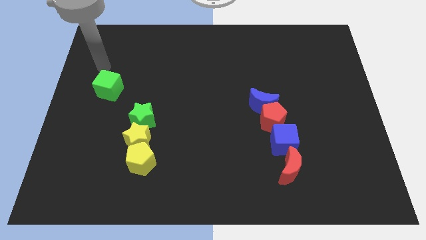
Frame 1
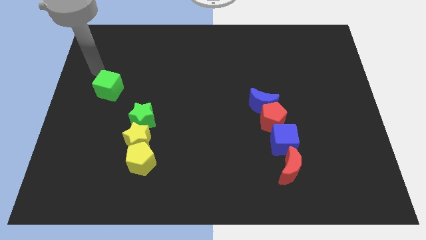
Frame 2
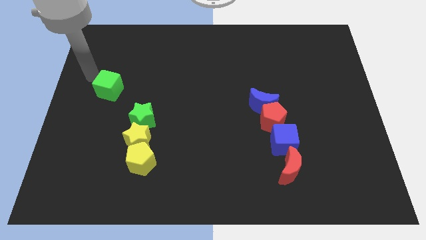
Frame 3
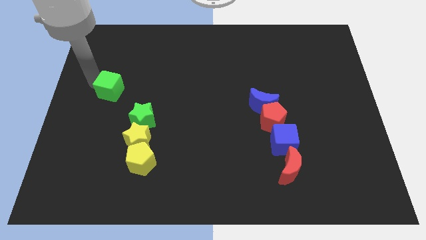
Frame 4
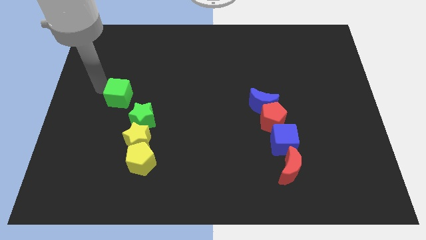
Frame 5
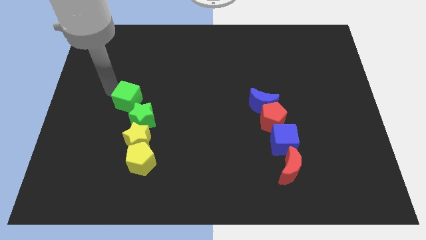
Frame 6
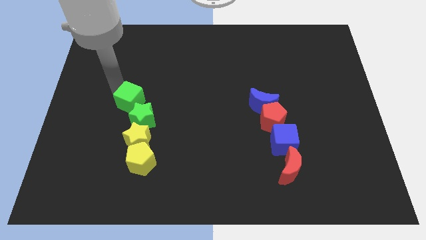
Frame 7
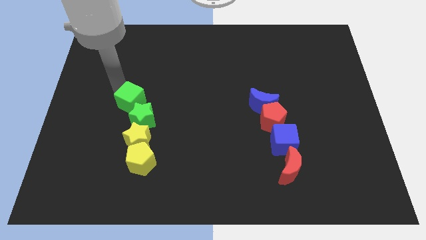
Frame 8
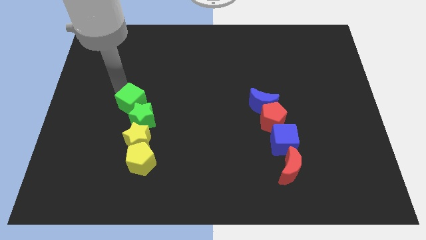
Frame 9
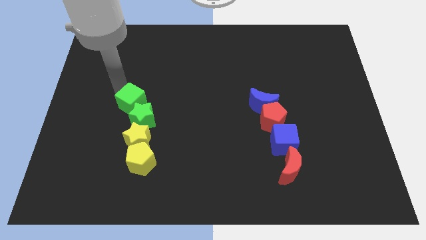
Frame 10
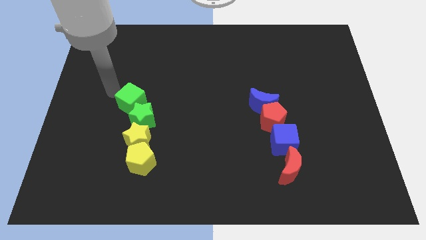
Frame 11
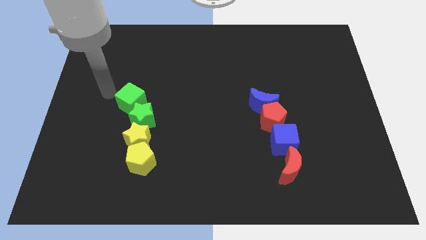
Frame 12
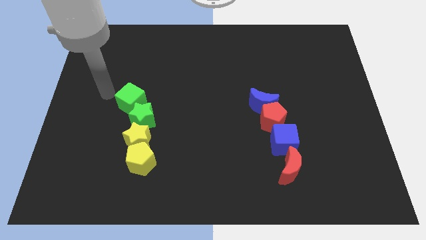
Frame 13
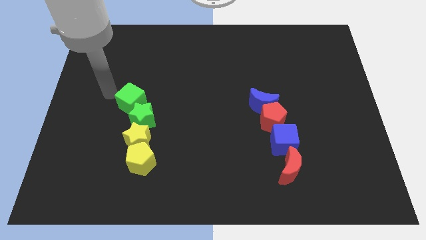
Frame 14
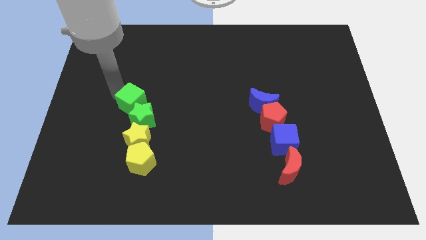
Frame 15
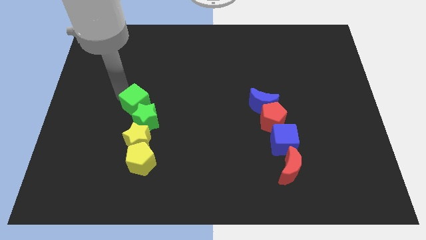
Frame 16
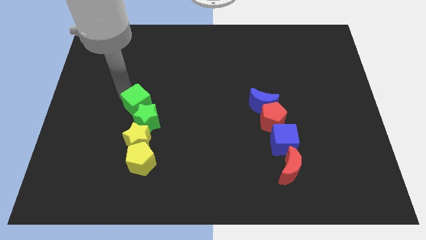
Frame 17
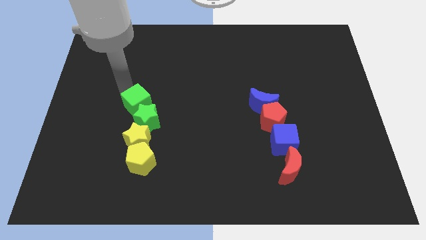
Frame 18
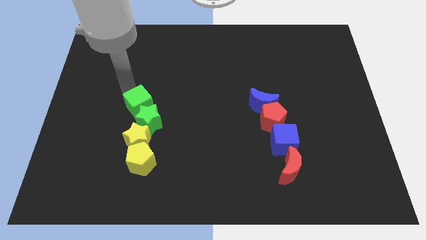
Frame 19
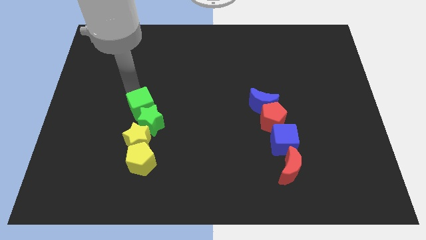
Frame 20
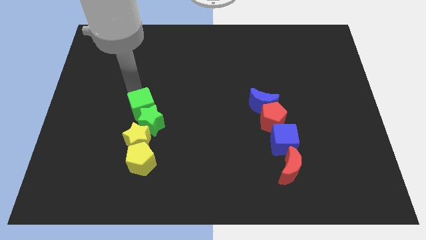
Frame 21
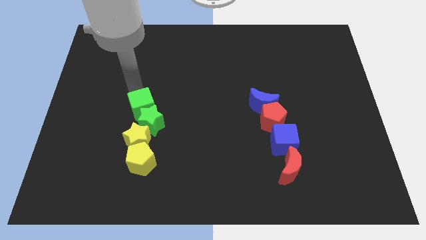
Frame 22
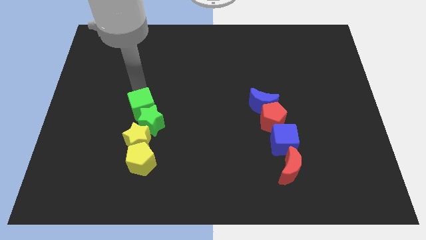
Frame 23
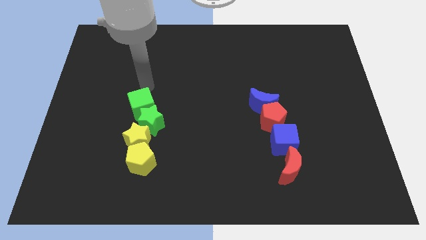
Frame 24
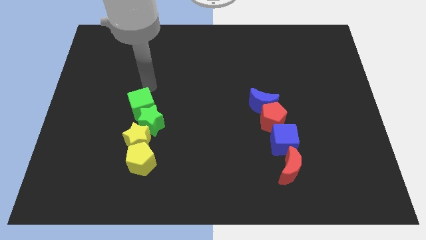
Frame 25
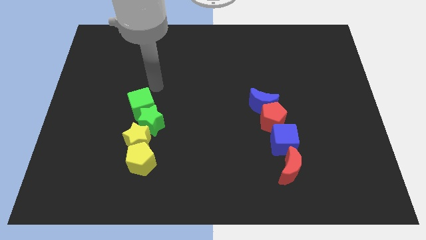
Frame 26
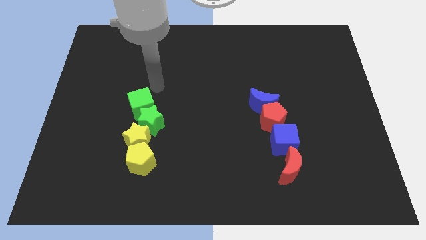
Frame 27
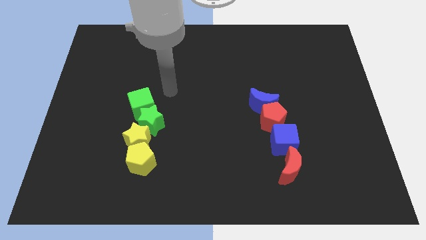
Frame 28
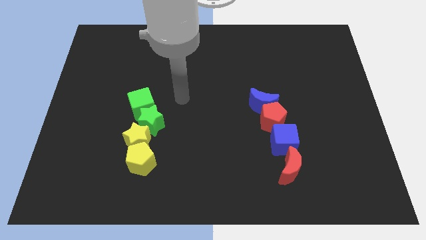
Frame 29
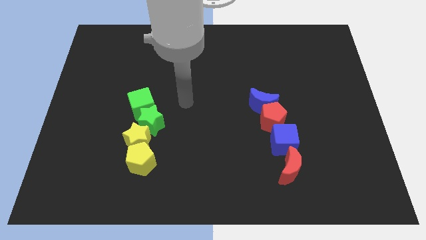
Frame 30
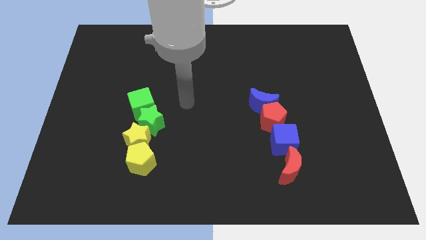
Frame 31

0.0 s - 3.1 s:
move the green cube into the green star

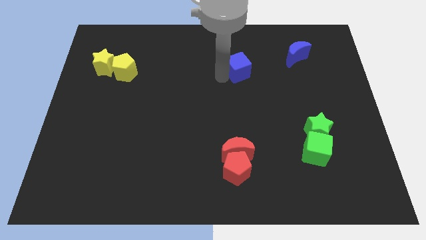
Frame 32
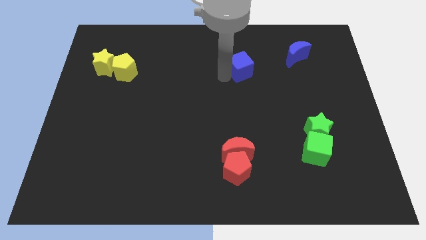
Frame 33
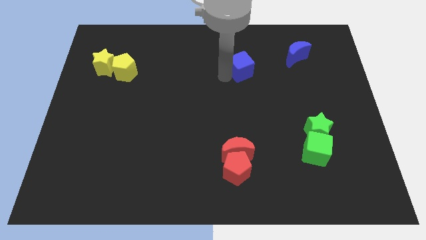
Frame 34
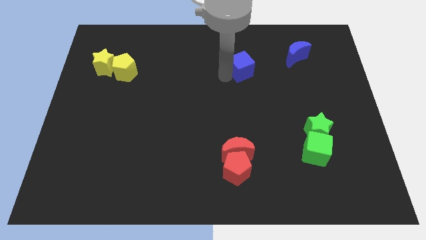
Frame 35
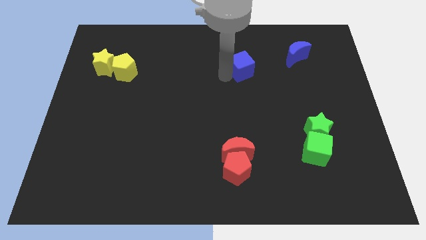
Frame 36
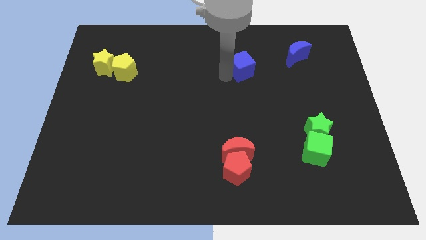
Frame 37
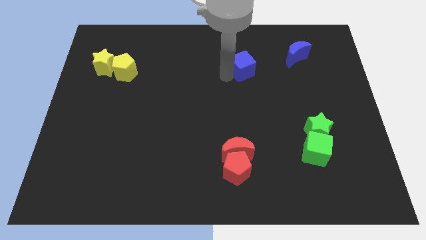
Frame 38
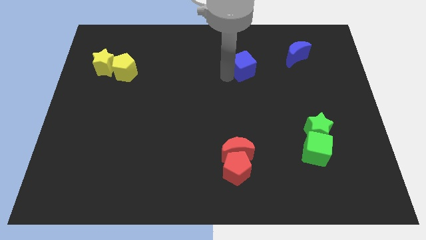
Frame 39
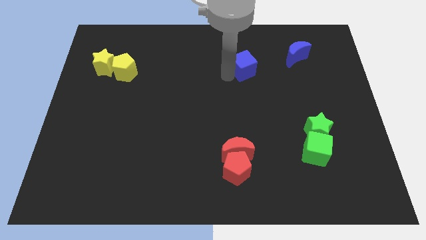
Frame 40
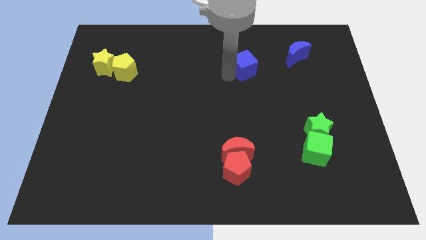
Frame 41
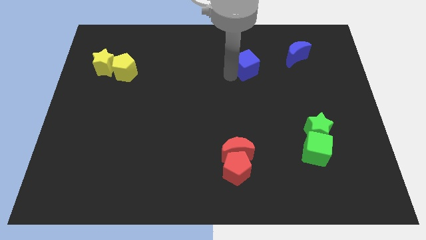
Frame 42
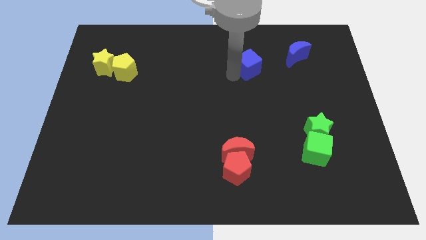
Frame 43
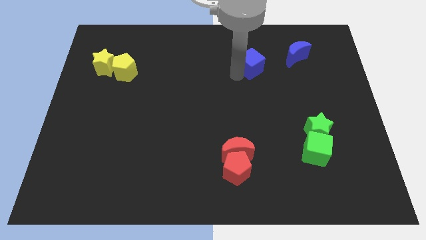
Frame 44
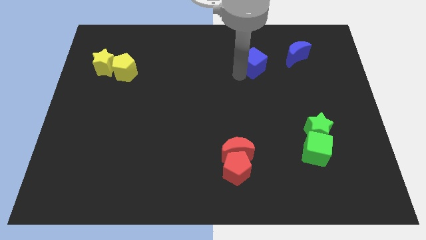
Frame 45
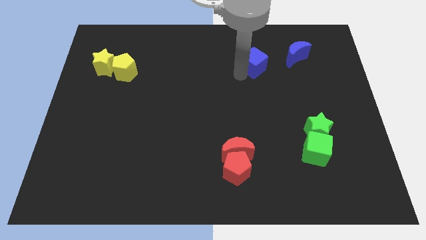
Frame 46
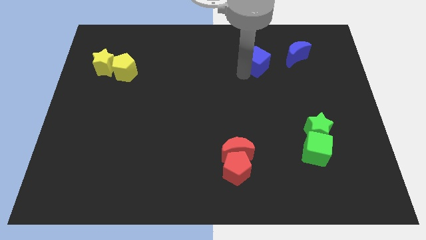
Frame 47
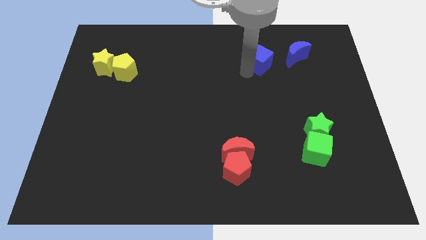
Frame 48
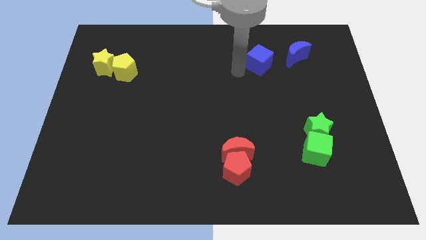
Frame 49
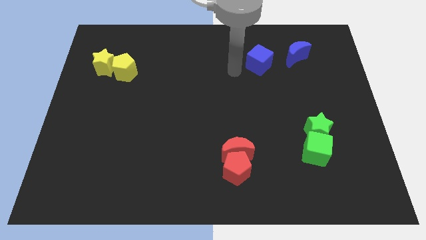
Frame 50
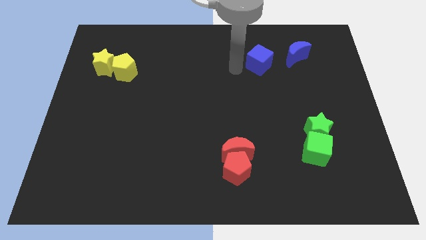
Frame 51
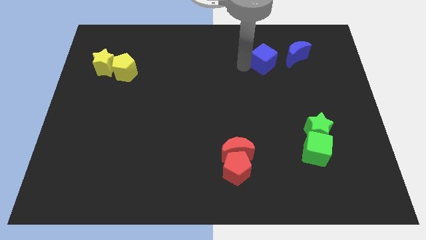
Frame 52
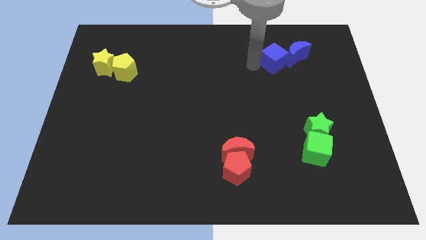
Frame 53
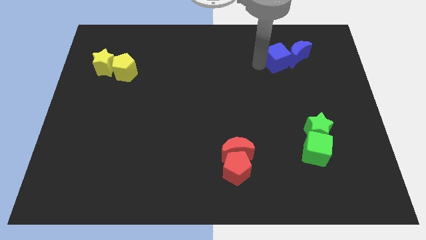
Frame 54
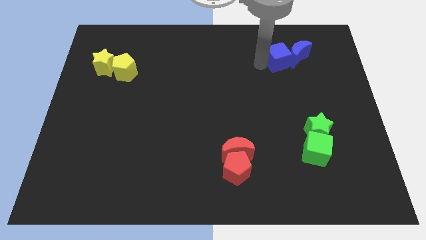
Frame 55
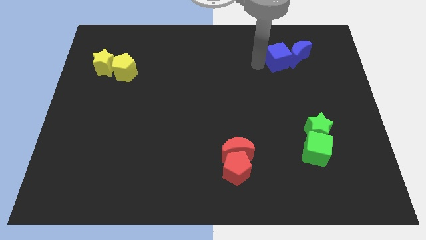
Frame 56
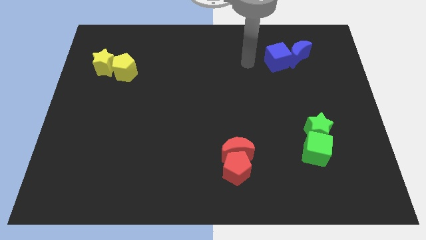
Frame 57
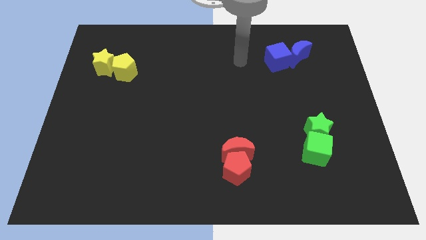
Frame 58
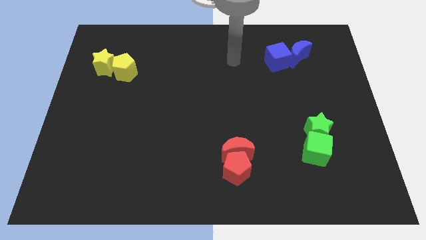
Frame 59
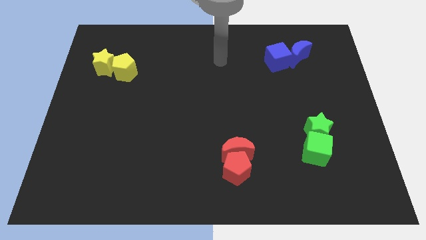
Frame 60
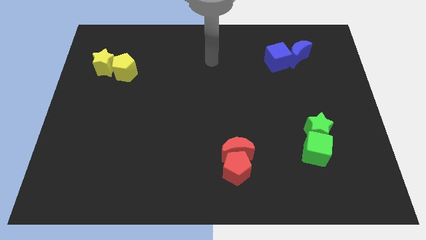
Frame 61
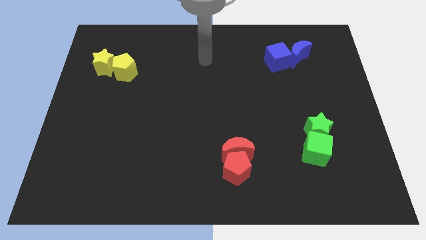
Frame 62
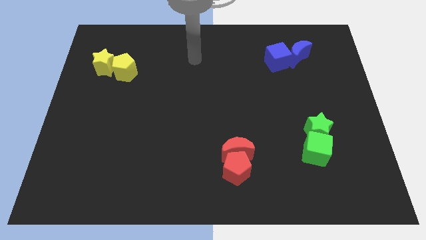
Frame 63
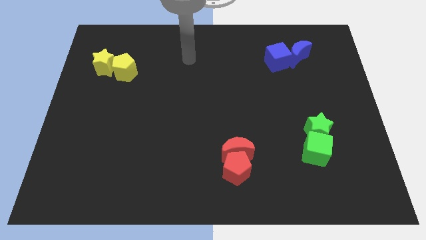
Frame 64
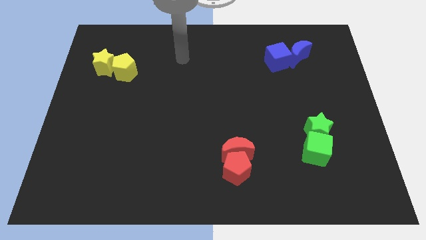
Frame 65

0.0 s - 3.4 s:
group up the blue blocks at the top side of the green blocks

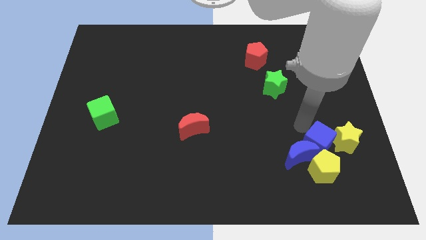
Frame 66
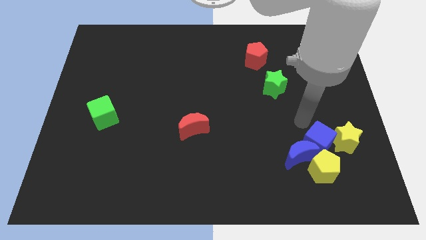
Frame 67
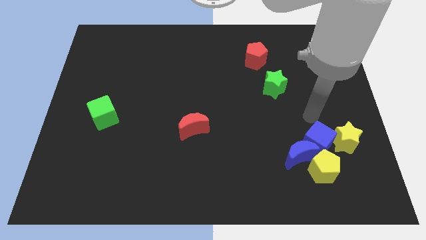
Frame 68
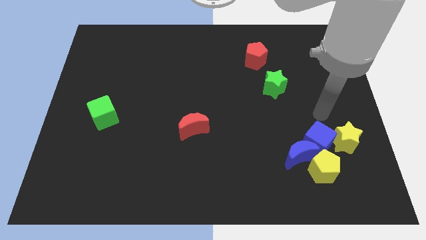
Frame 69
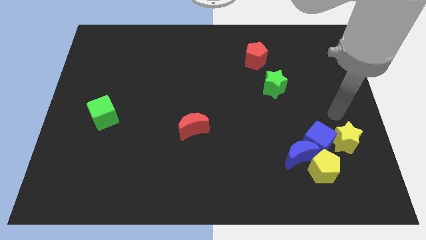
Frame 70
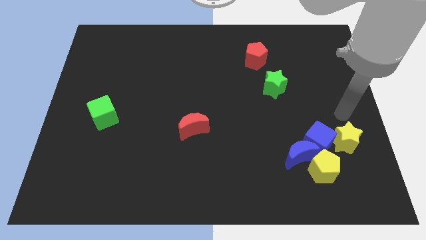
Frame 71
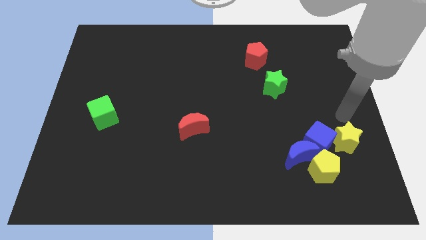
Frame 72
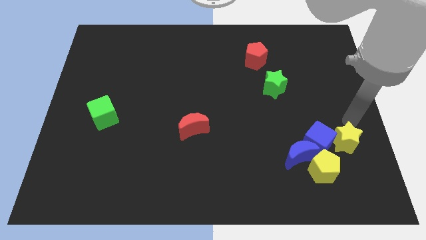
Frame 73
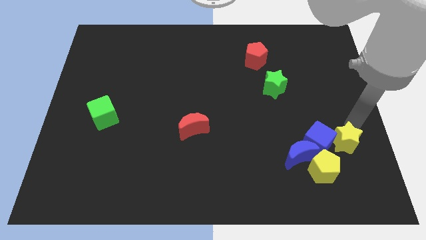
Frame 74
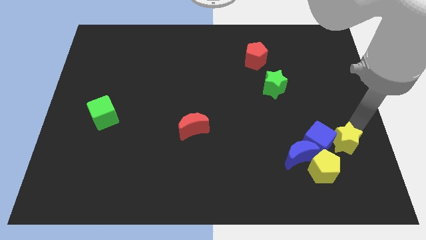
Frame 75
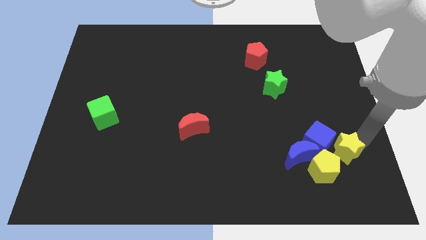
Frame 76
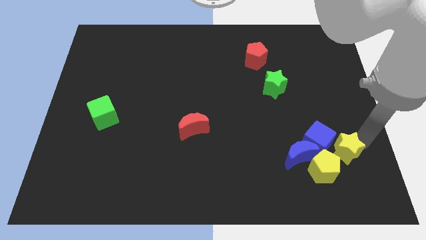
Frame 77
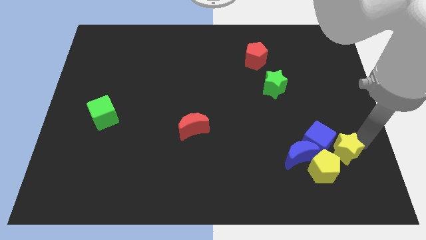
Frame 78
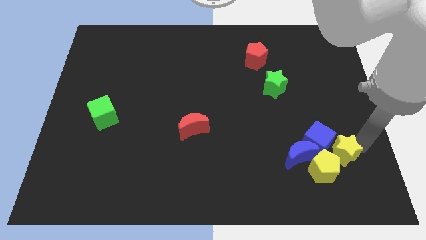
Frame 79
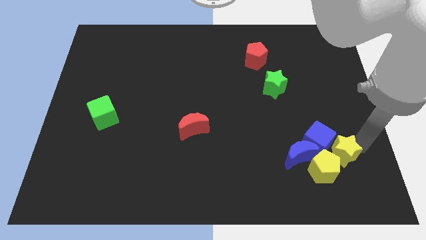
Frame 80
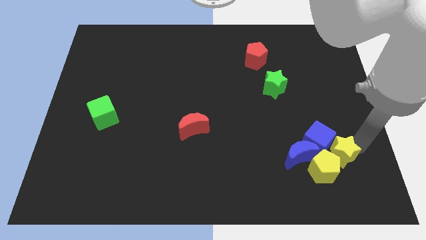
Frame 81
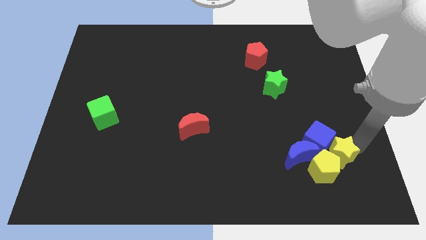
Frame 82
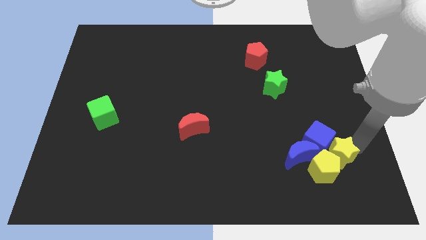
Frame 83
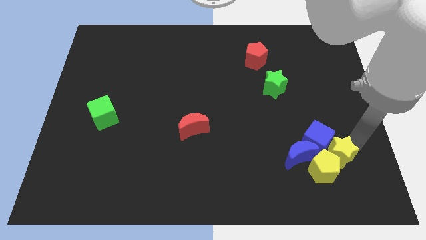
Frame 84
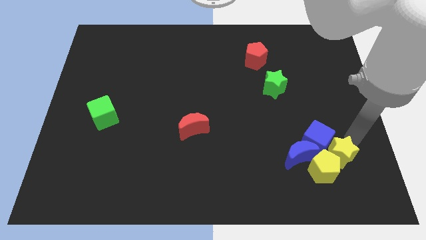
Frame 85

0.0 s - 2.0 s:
push the yellow star into the yellow pentagon

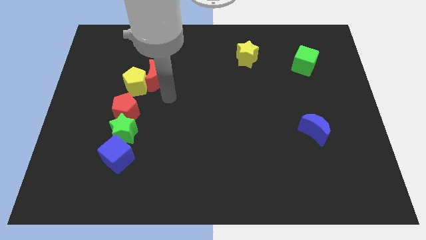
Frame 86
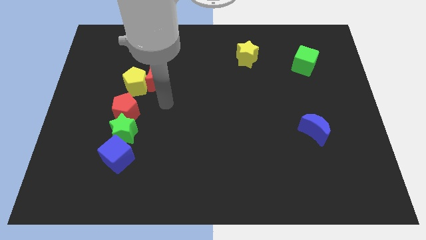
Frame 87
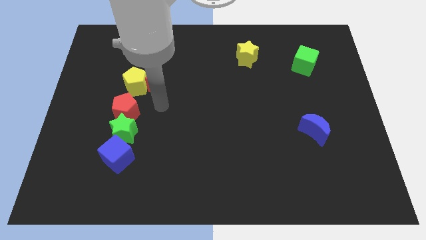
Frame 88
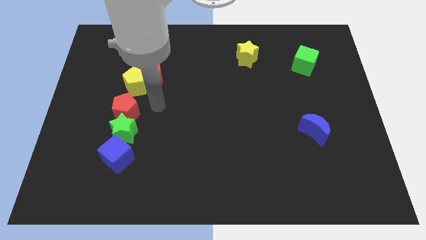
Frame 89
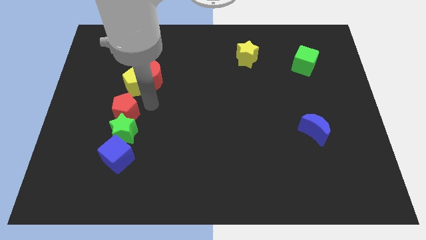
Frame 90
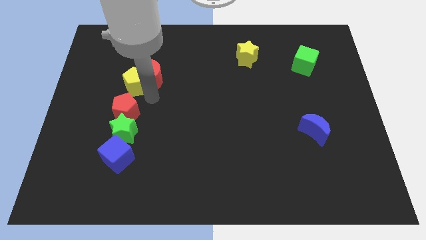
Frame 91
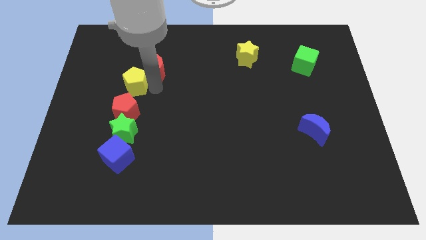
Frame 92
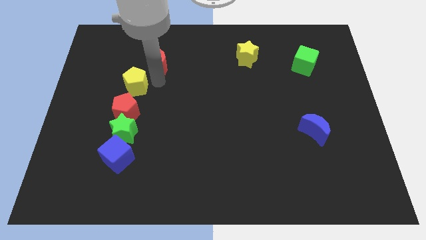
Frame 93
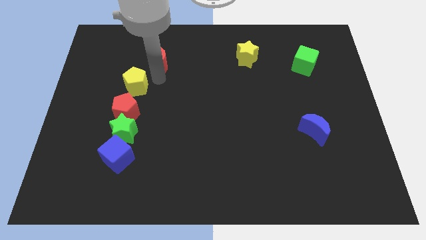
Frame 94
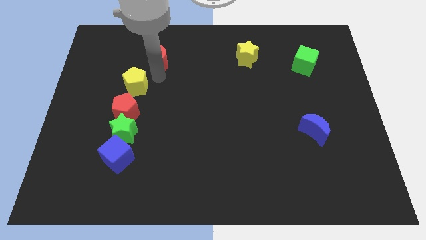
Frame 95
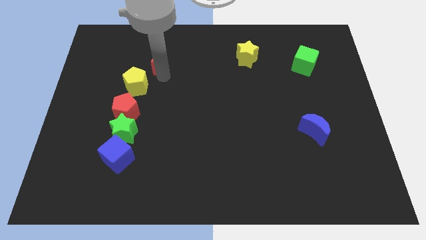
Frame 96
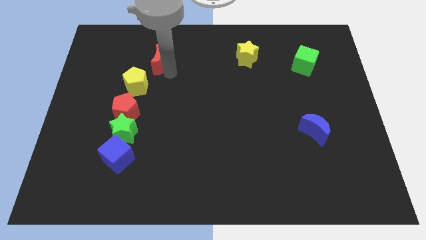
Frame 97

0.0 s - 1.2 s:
separate the red crescent away from the yellow pentagon
